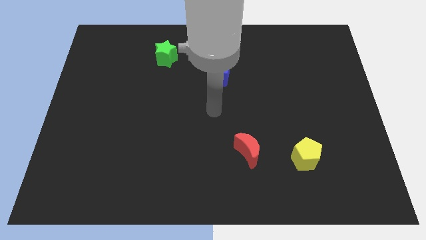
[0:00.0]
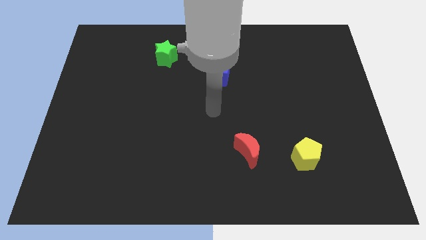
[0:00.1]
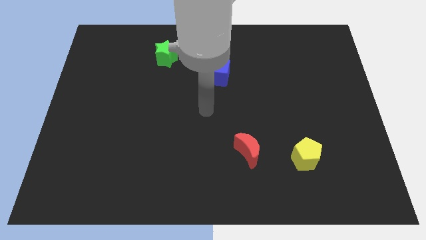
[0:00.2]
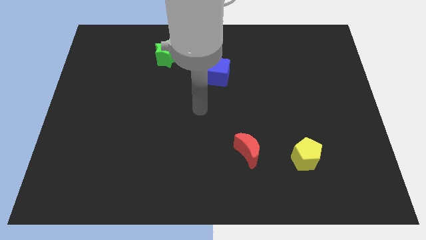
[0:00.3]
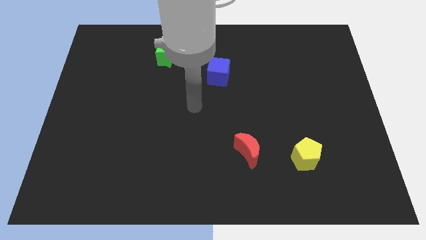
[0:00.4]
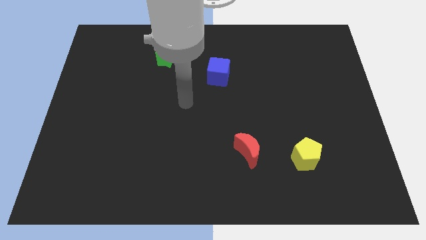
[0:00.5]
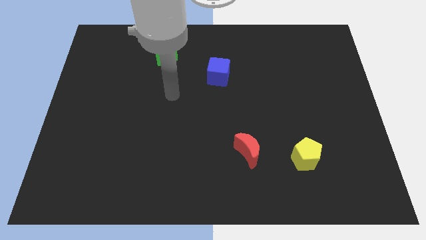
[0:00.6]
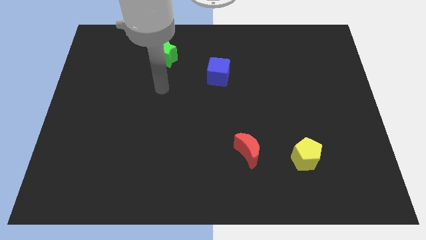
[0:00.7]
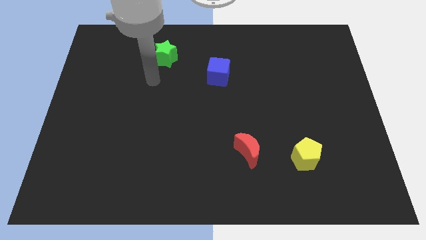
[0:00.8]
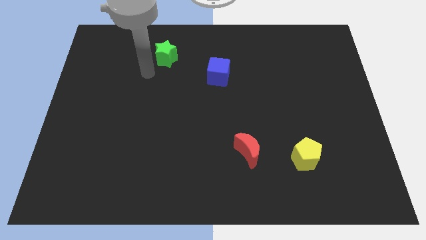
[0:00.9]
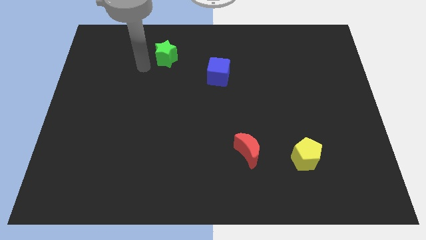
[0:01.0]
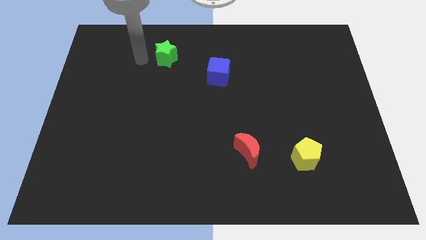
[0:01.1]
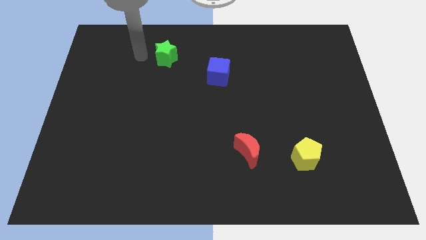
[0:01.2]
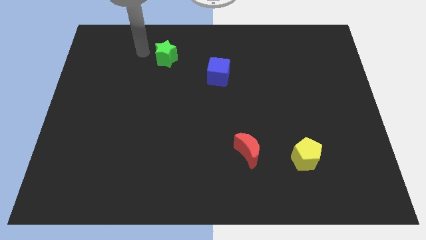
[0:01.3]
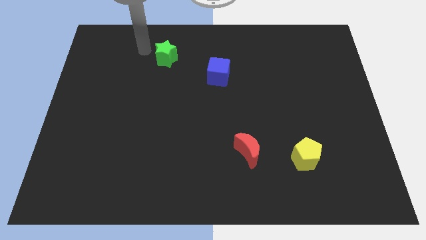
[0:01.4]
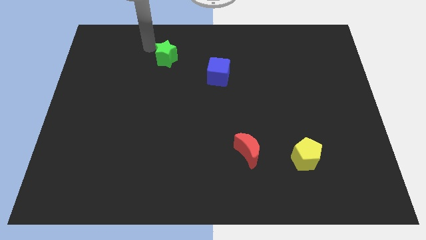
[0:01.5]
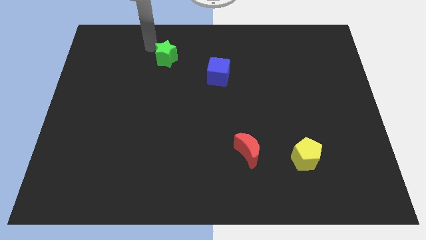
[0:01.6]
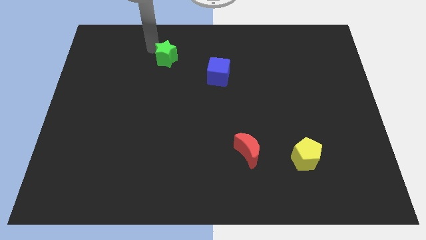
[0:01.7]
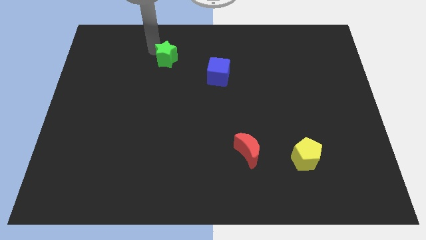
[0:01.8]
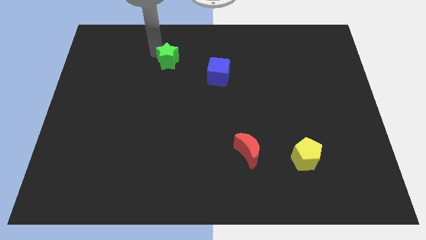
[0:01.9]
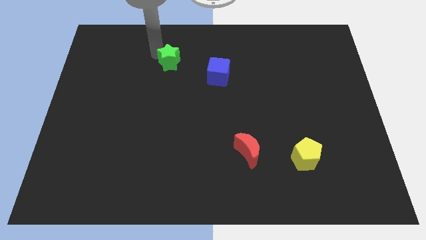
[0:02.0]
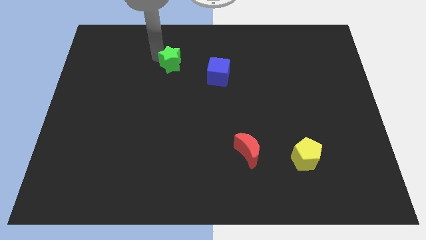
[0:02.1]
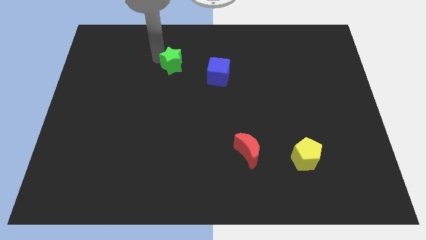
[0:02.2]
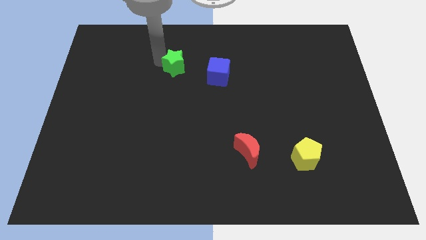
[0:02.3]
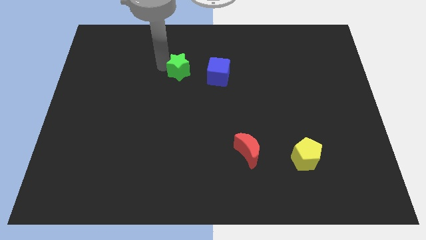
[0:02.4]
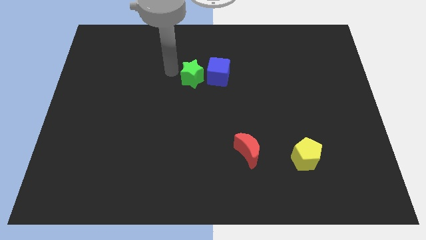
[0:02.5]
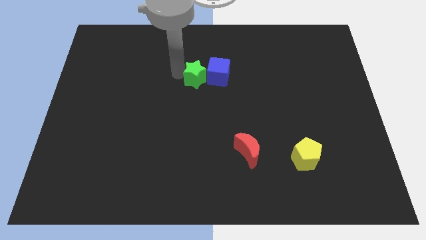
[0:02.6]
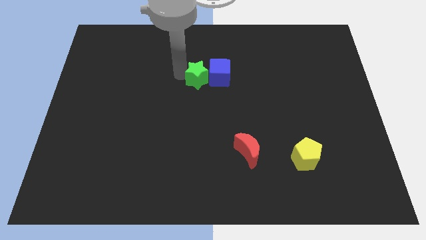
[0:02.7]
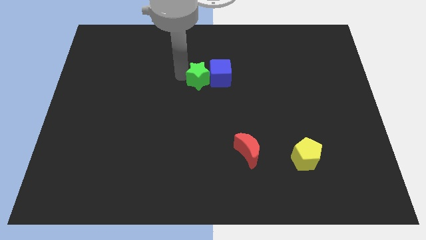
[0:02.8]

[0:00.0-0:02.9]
move the green block towards the blue block

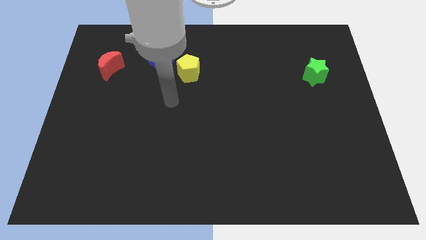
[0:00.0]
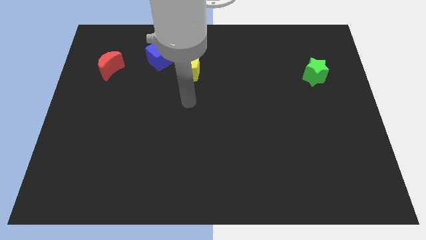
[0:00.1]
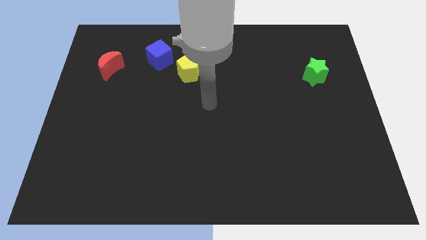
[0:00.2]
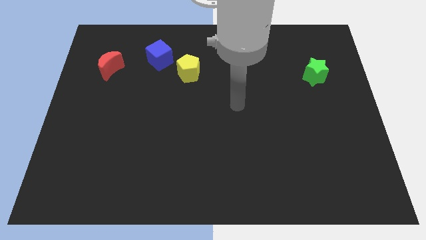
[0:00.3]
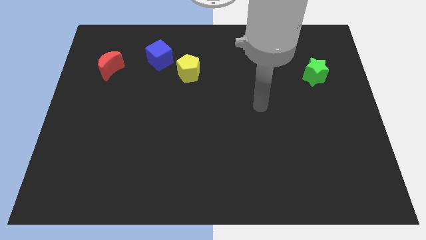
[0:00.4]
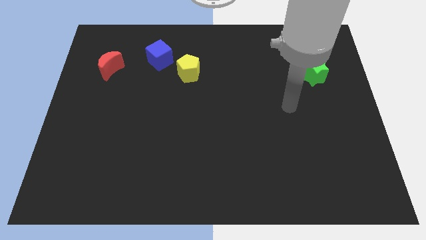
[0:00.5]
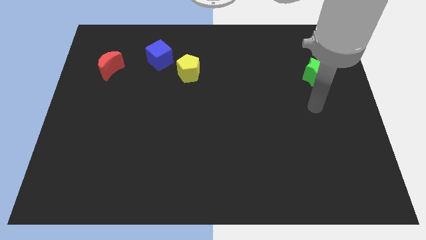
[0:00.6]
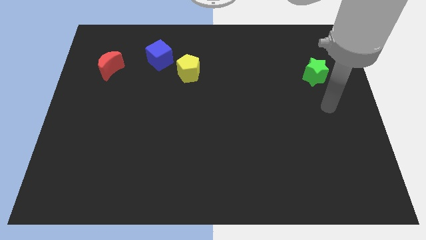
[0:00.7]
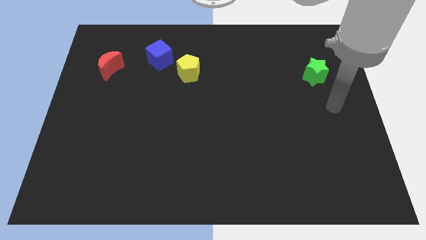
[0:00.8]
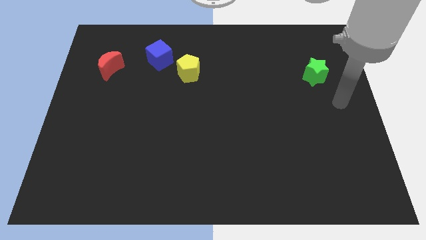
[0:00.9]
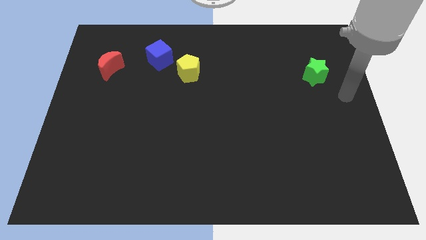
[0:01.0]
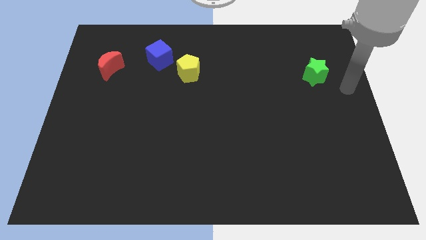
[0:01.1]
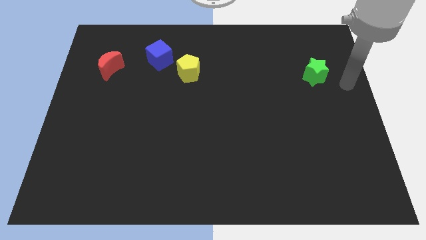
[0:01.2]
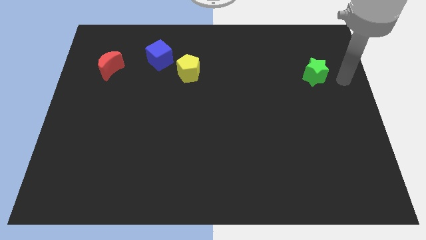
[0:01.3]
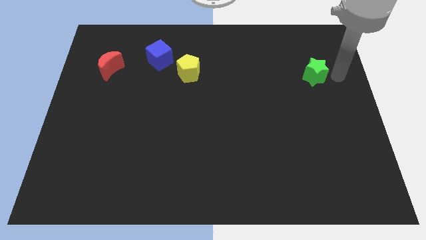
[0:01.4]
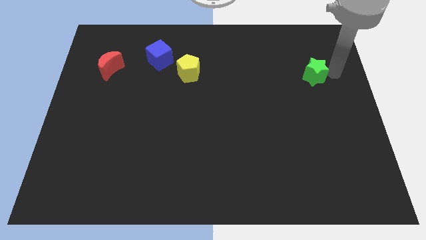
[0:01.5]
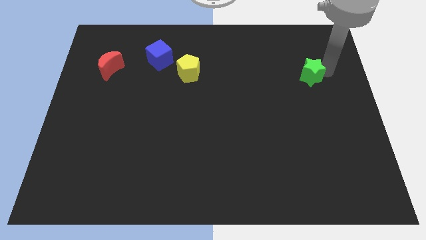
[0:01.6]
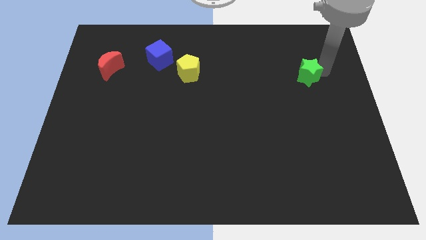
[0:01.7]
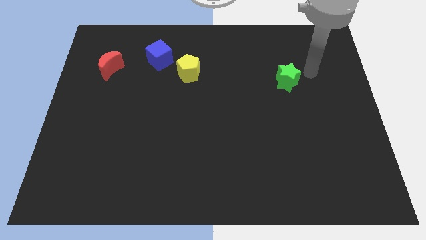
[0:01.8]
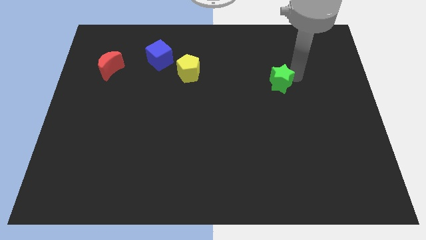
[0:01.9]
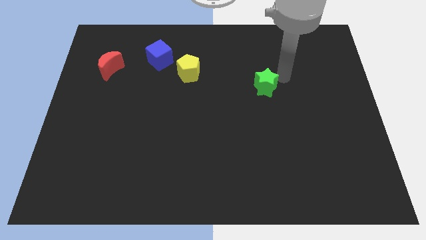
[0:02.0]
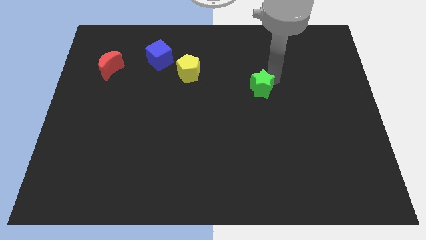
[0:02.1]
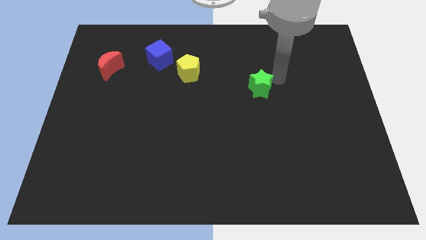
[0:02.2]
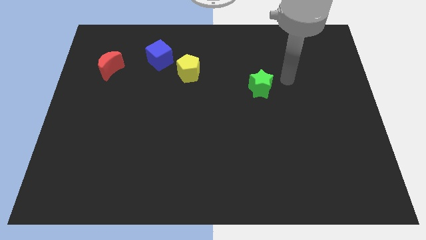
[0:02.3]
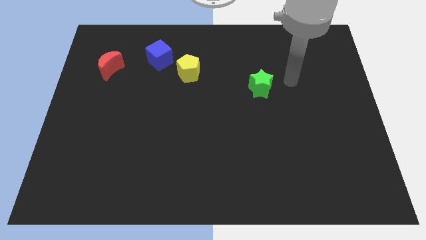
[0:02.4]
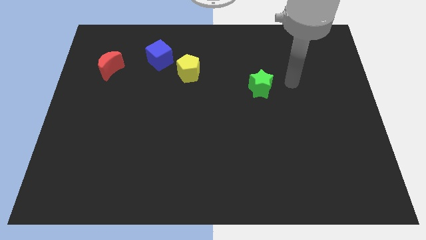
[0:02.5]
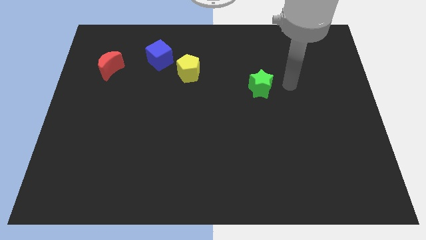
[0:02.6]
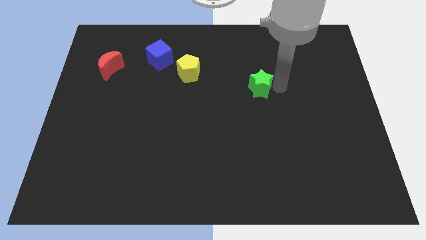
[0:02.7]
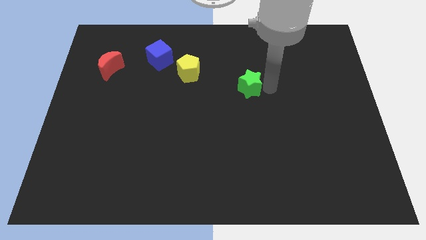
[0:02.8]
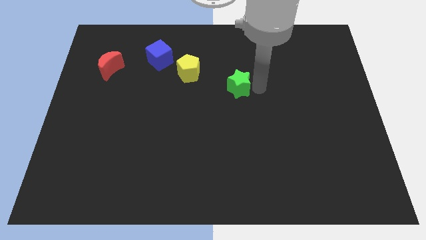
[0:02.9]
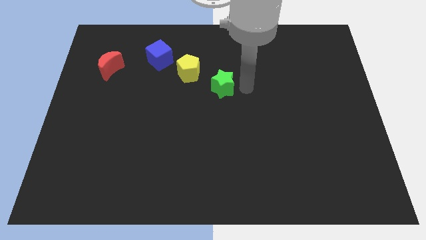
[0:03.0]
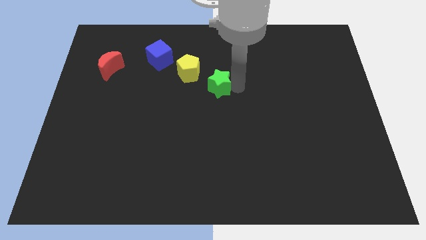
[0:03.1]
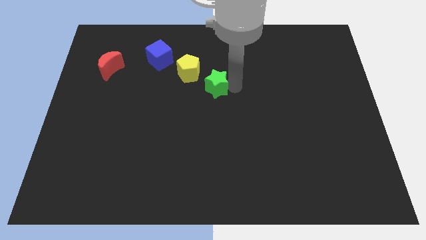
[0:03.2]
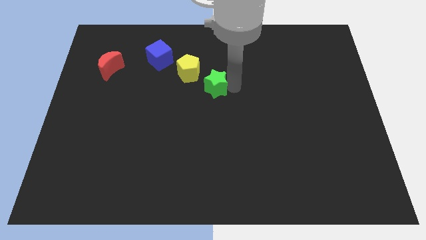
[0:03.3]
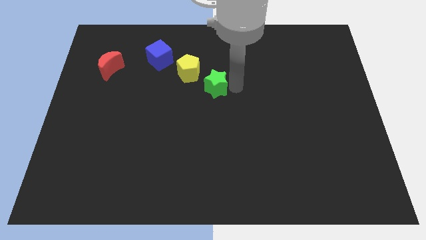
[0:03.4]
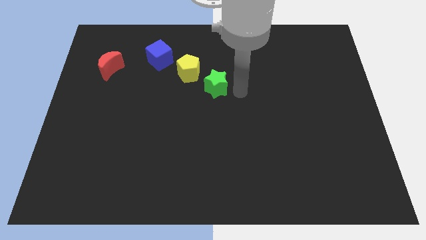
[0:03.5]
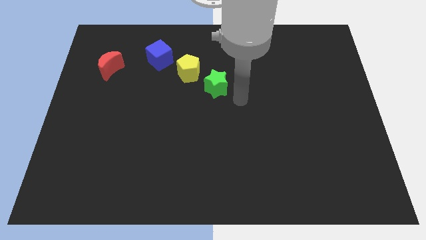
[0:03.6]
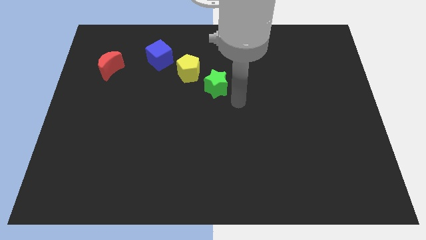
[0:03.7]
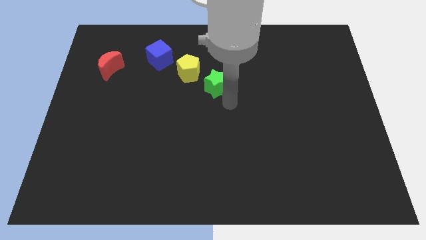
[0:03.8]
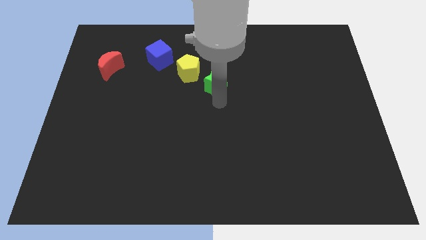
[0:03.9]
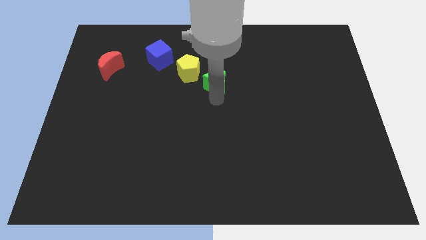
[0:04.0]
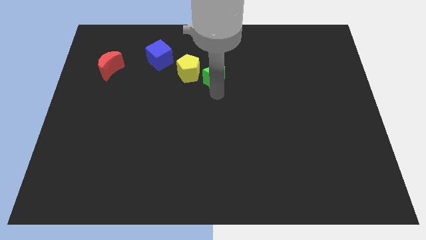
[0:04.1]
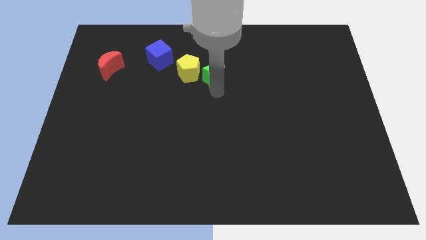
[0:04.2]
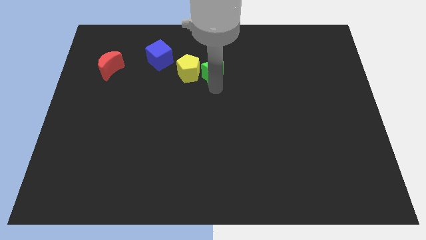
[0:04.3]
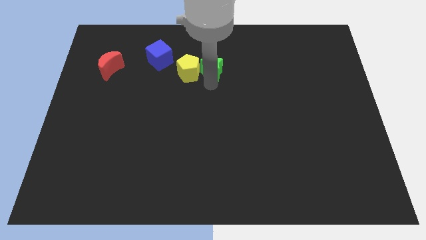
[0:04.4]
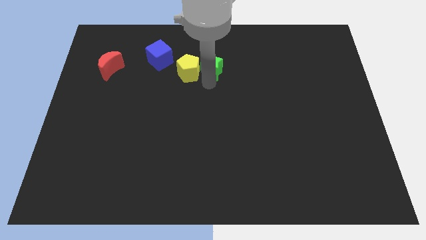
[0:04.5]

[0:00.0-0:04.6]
slide the green block next to the pentagon

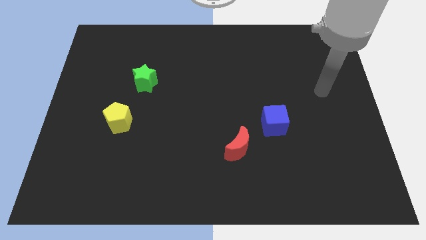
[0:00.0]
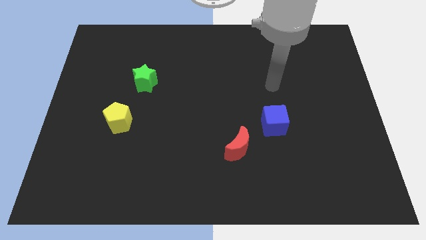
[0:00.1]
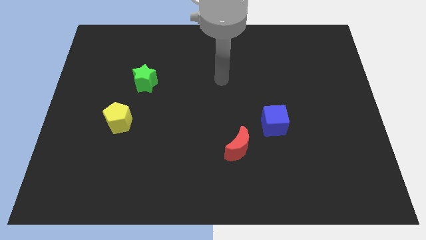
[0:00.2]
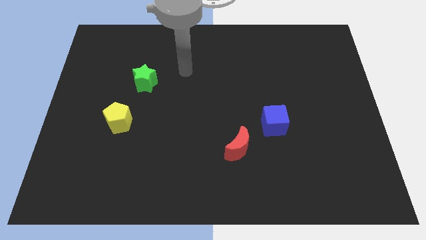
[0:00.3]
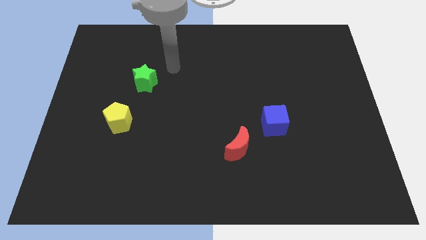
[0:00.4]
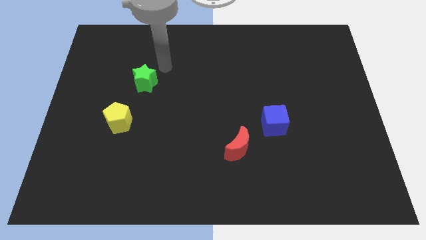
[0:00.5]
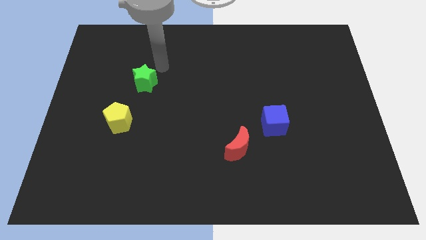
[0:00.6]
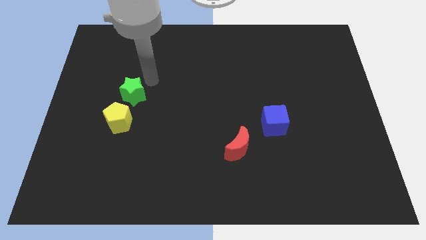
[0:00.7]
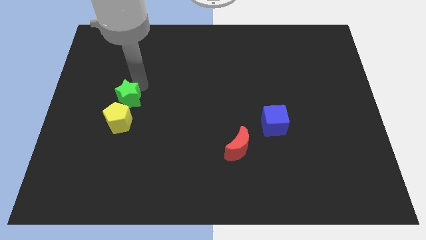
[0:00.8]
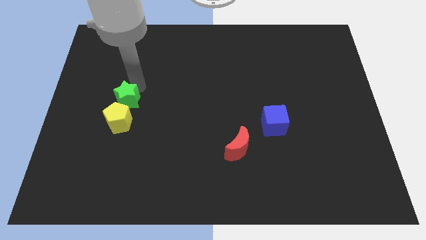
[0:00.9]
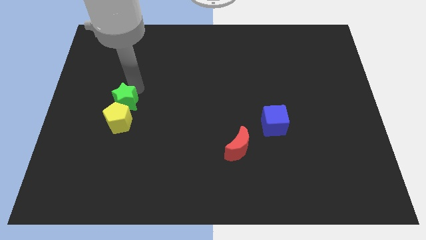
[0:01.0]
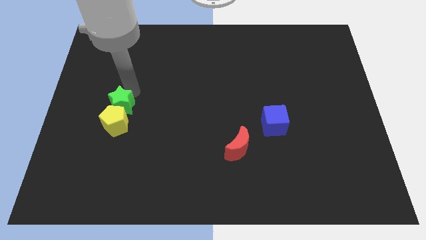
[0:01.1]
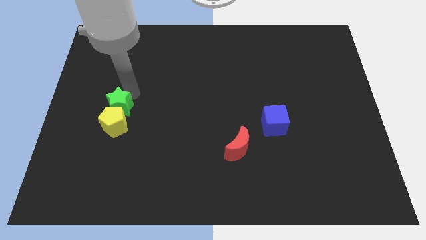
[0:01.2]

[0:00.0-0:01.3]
put the green star towards the pentagon
